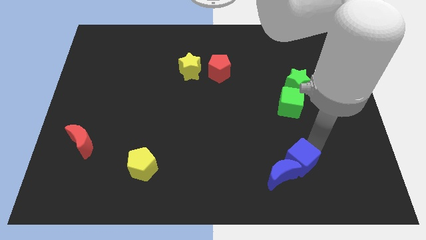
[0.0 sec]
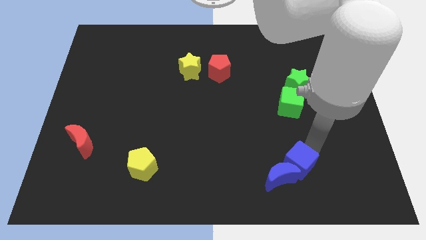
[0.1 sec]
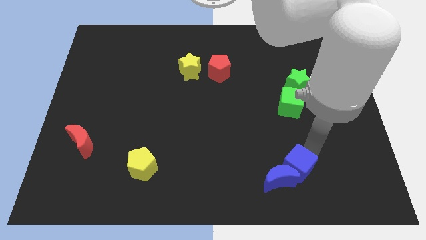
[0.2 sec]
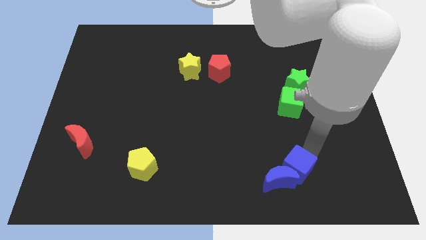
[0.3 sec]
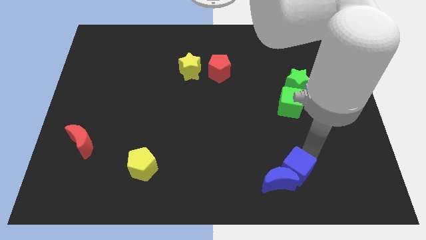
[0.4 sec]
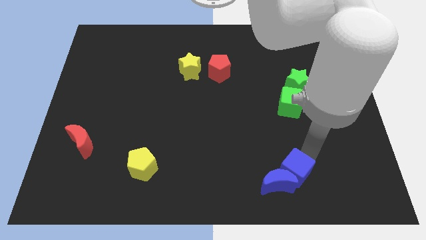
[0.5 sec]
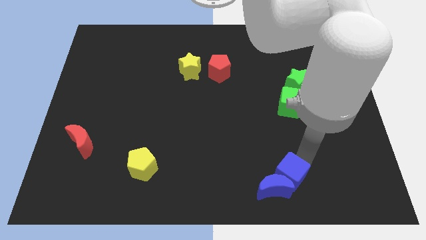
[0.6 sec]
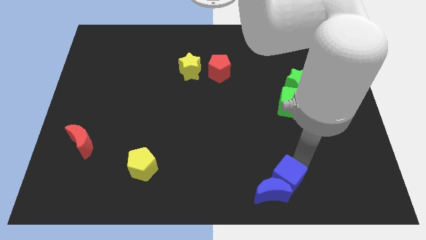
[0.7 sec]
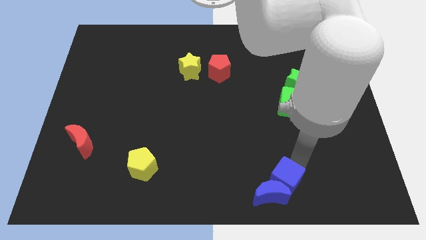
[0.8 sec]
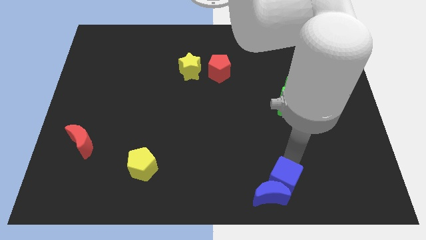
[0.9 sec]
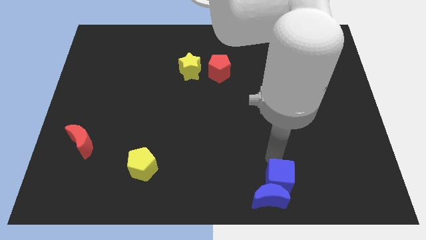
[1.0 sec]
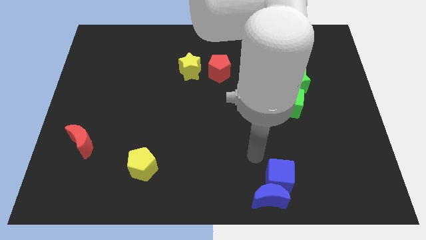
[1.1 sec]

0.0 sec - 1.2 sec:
push the blue objects to the bottom side of the table

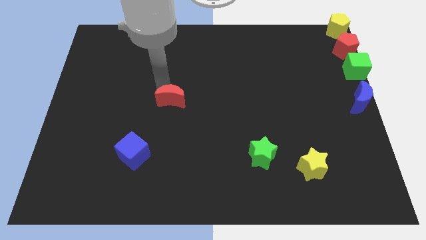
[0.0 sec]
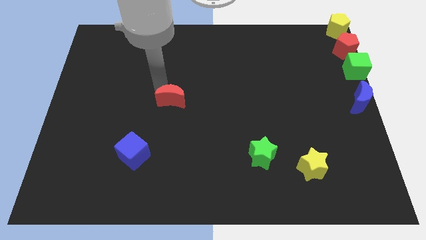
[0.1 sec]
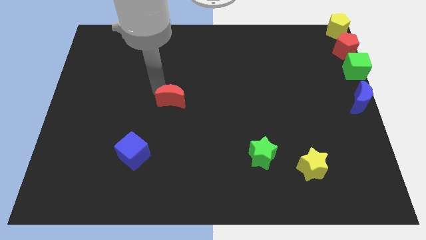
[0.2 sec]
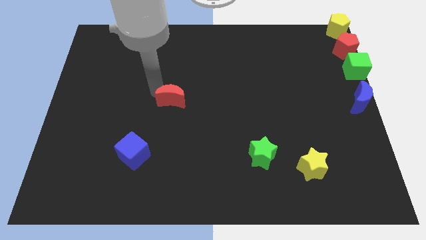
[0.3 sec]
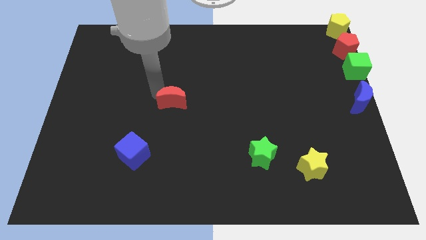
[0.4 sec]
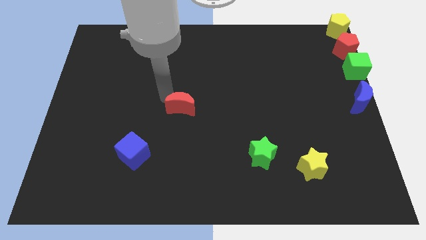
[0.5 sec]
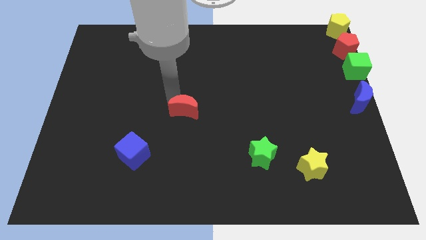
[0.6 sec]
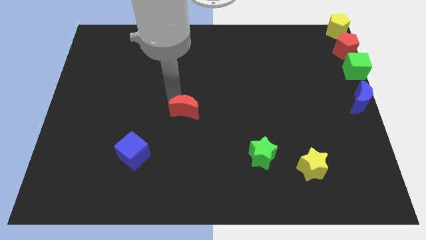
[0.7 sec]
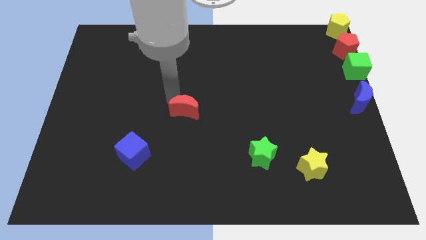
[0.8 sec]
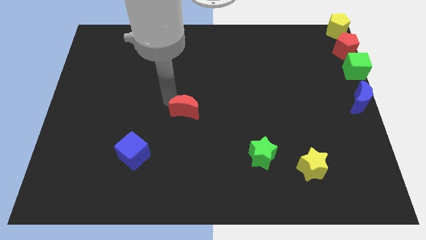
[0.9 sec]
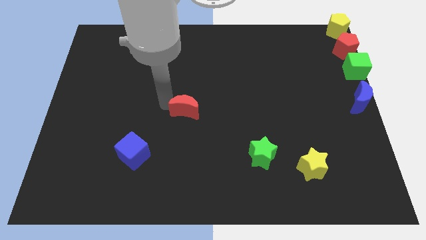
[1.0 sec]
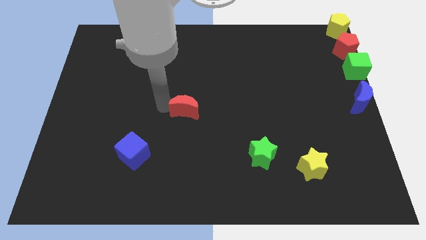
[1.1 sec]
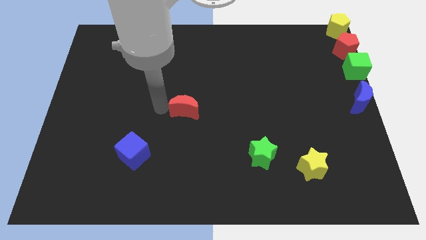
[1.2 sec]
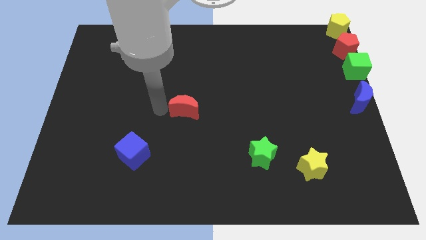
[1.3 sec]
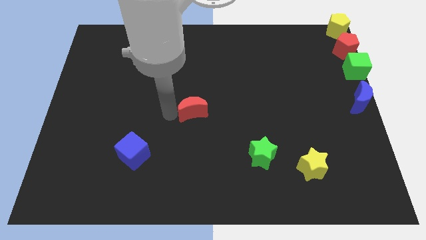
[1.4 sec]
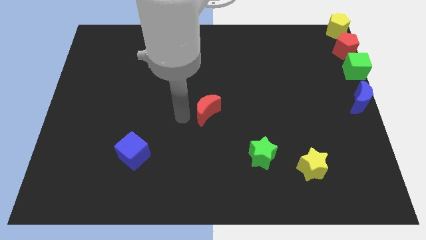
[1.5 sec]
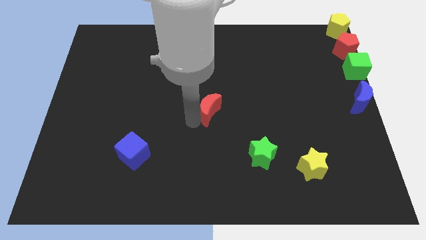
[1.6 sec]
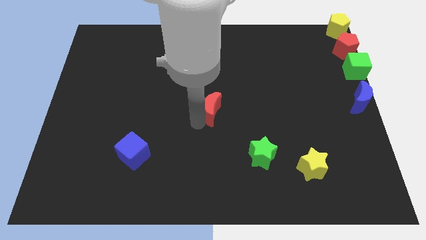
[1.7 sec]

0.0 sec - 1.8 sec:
place the red moon to the center of the board

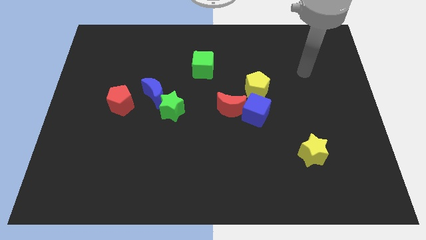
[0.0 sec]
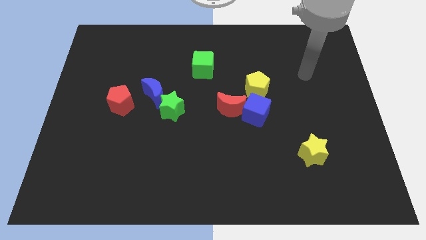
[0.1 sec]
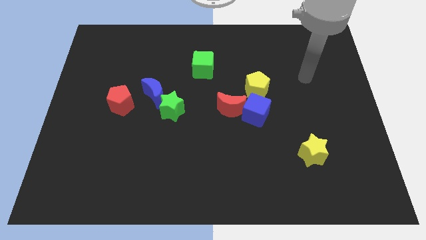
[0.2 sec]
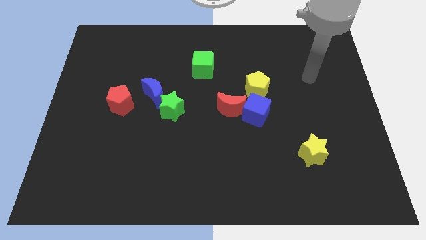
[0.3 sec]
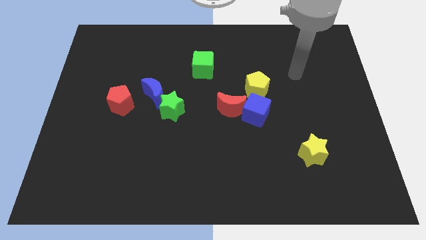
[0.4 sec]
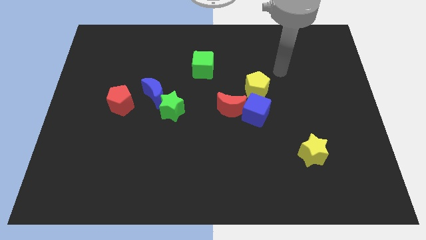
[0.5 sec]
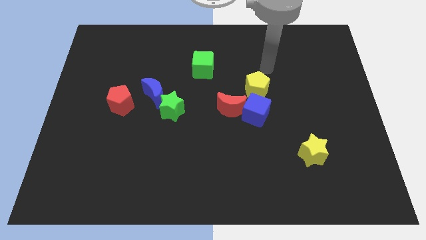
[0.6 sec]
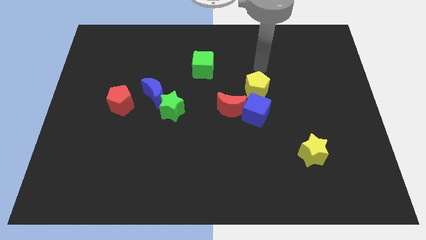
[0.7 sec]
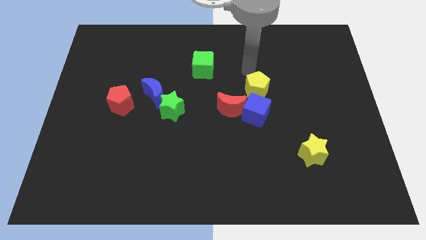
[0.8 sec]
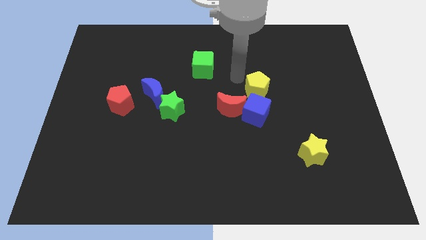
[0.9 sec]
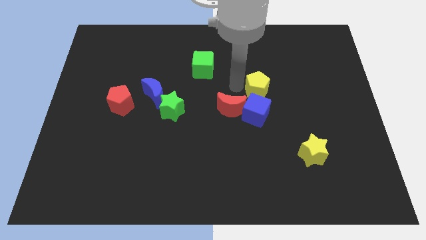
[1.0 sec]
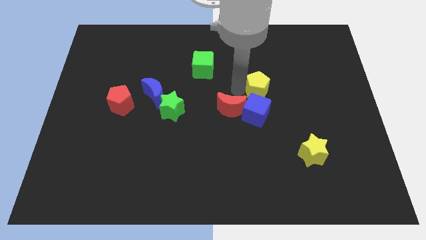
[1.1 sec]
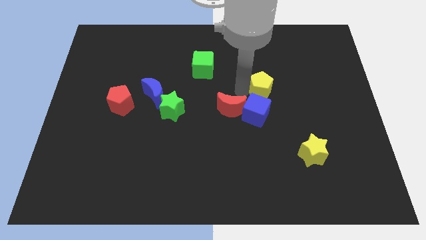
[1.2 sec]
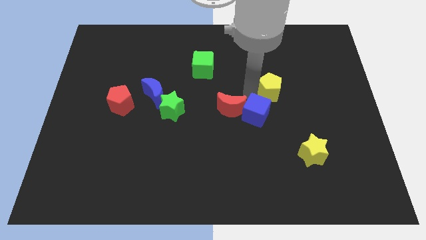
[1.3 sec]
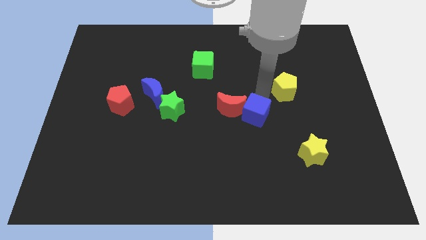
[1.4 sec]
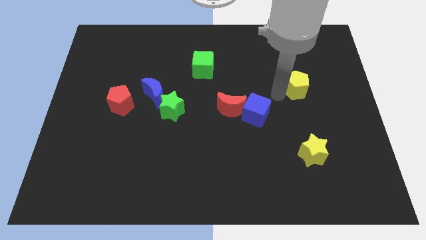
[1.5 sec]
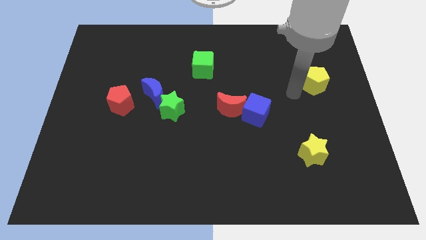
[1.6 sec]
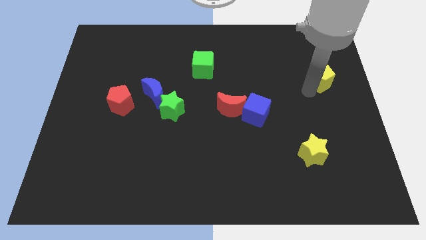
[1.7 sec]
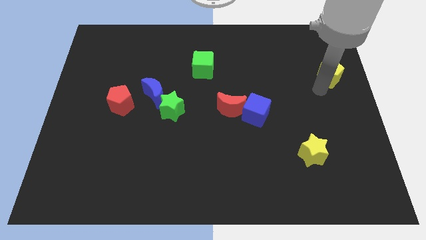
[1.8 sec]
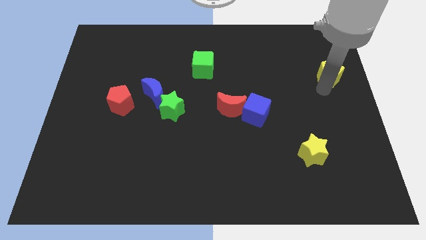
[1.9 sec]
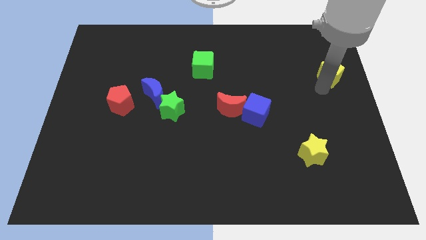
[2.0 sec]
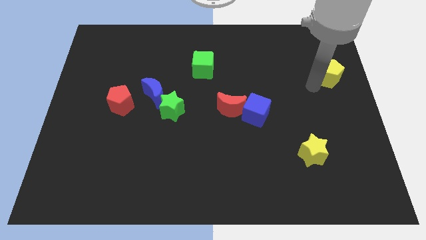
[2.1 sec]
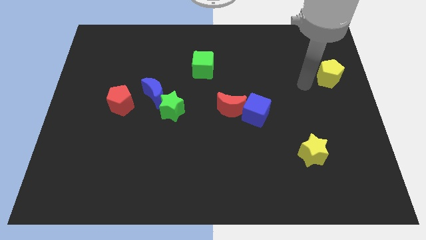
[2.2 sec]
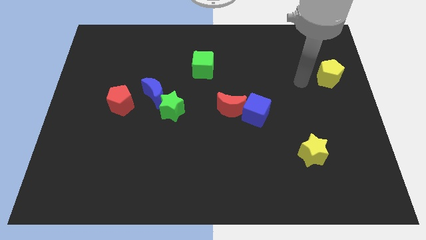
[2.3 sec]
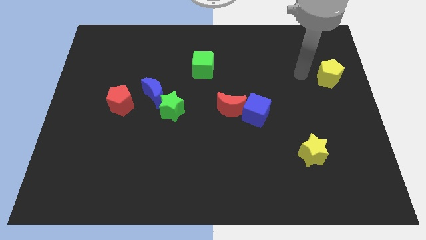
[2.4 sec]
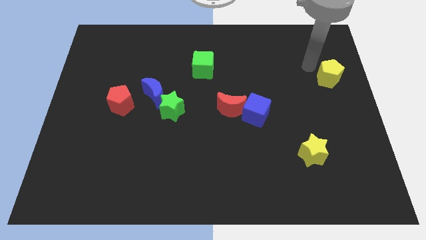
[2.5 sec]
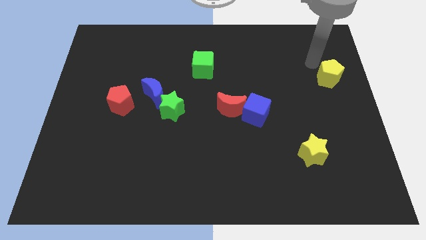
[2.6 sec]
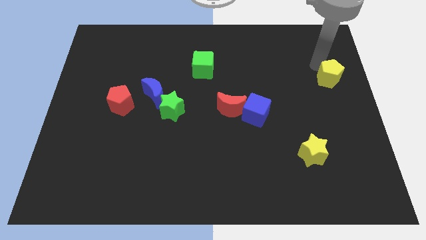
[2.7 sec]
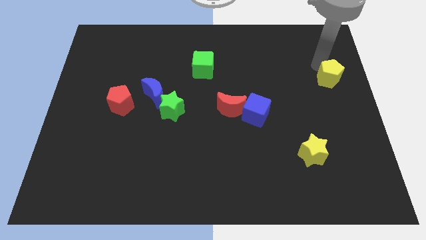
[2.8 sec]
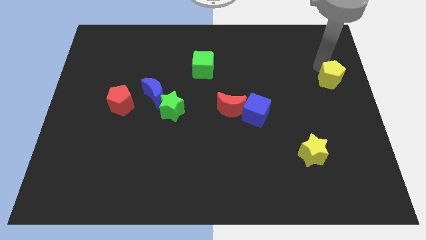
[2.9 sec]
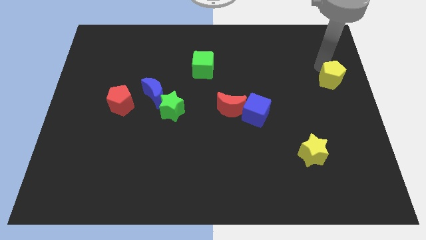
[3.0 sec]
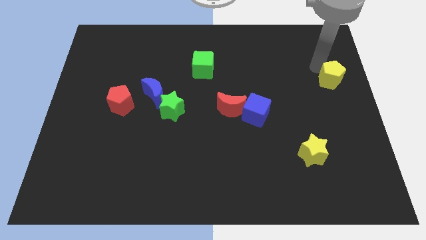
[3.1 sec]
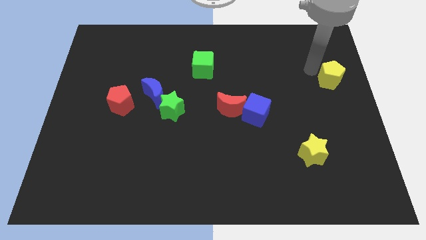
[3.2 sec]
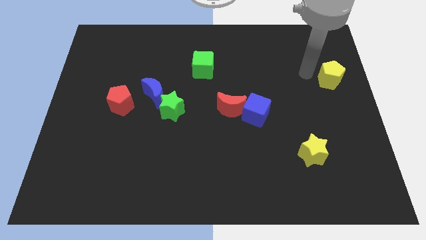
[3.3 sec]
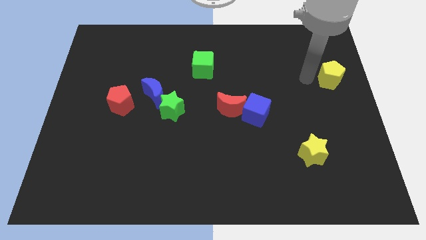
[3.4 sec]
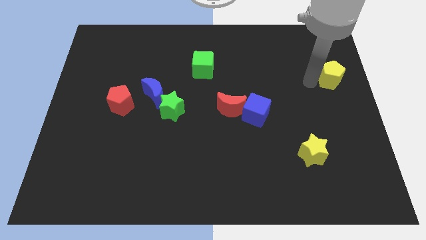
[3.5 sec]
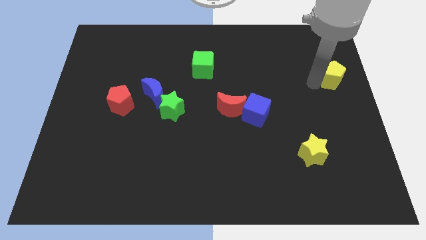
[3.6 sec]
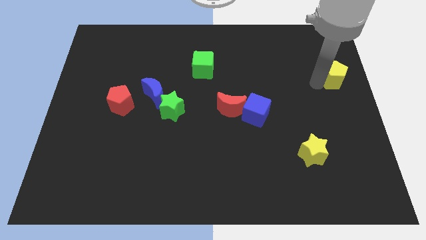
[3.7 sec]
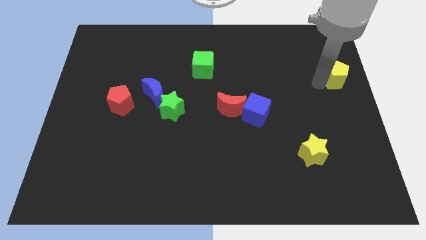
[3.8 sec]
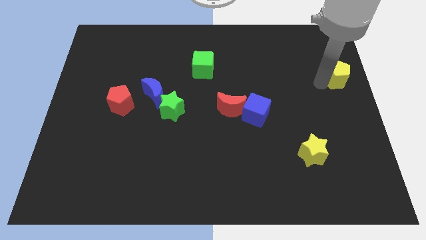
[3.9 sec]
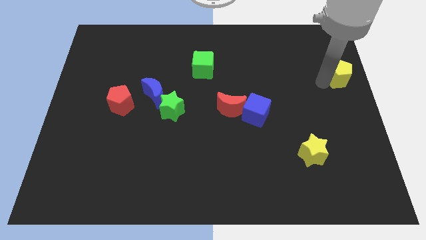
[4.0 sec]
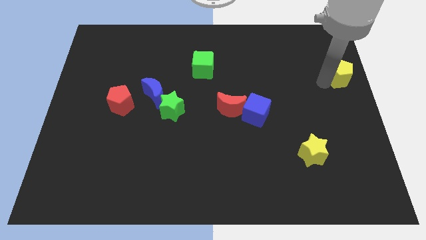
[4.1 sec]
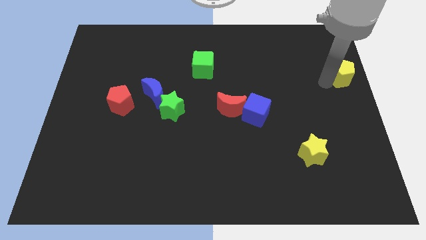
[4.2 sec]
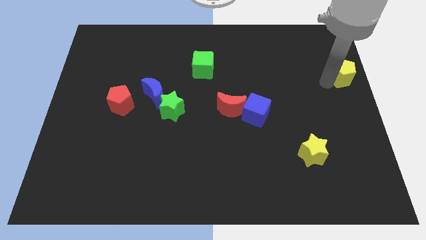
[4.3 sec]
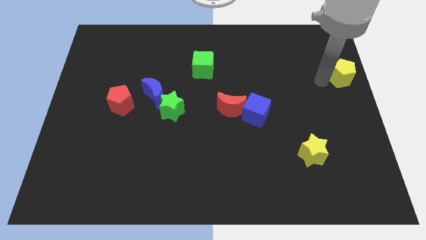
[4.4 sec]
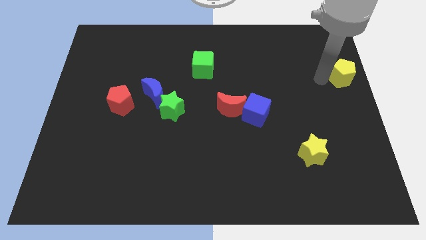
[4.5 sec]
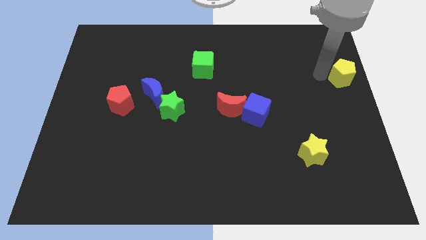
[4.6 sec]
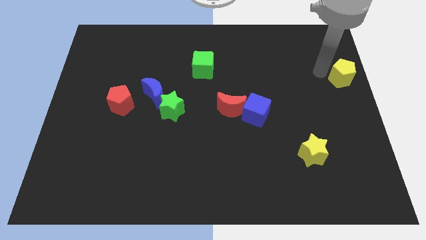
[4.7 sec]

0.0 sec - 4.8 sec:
move the yellow pentagon to the right center of the board

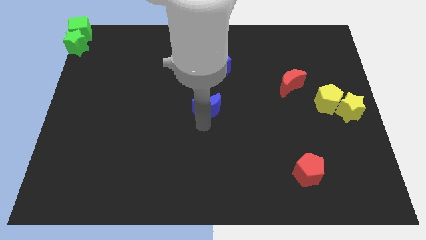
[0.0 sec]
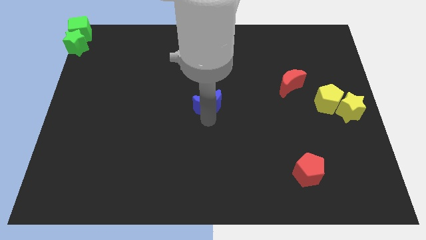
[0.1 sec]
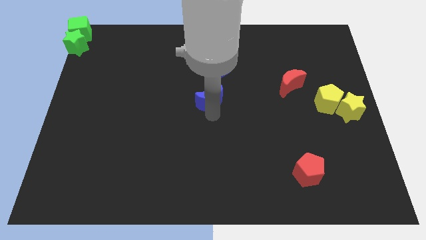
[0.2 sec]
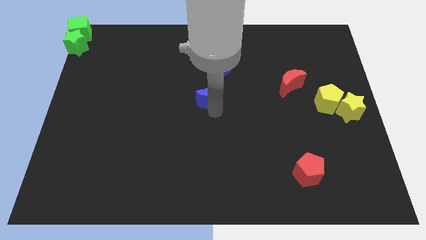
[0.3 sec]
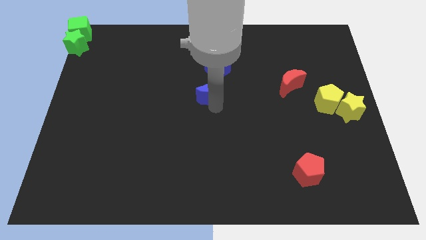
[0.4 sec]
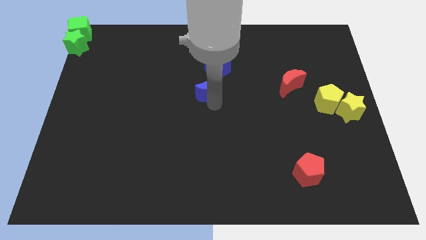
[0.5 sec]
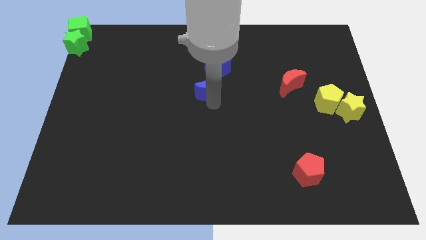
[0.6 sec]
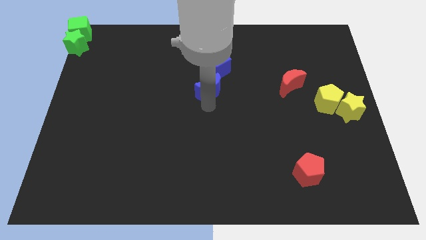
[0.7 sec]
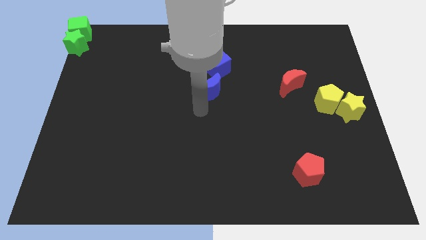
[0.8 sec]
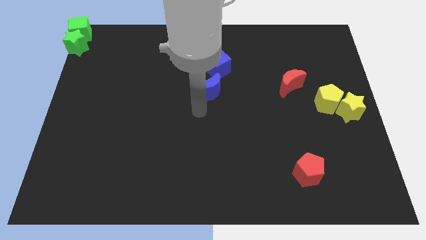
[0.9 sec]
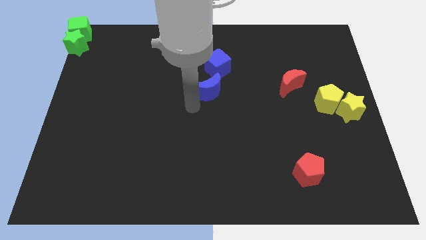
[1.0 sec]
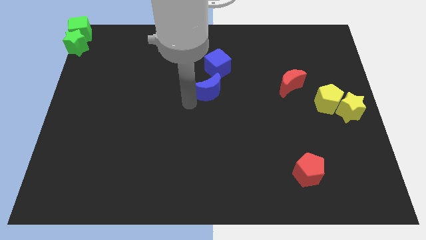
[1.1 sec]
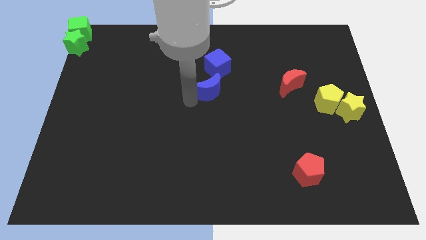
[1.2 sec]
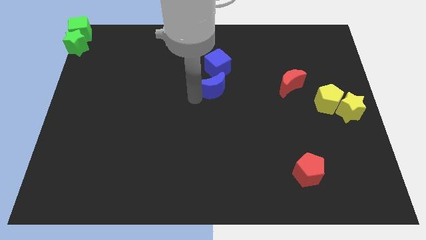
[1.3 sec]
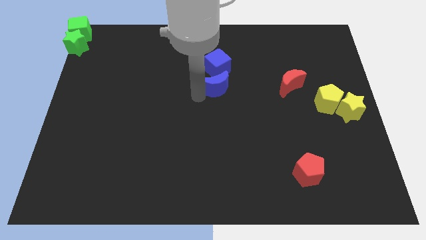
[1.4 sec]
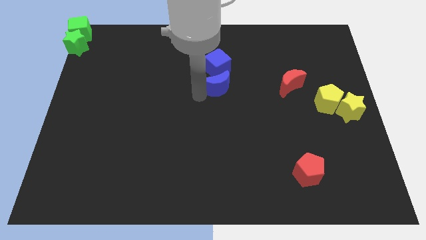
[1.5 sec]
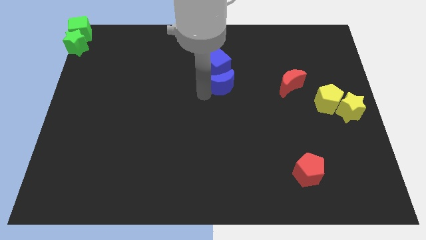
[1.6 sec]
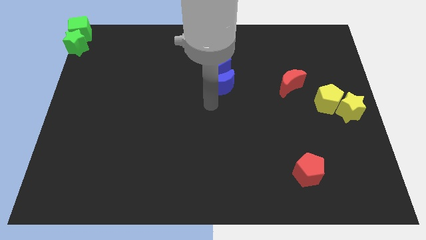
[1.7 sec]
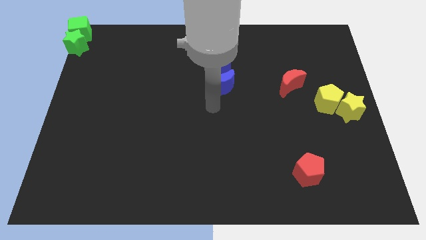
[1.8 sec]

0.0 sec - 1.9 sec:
put the blue moon vertically below the blue cube
